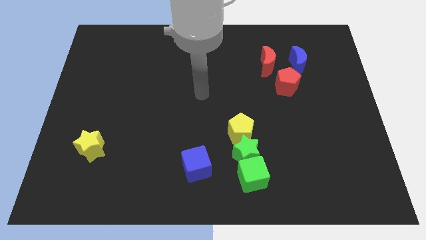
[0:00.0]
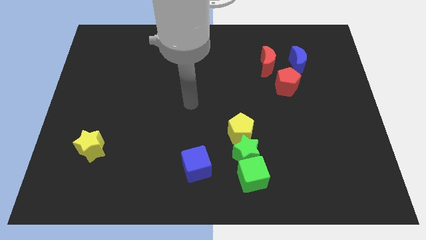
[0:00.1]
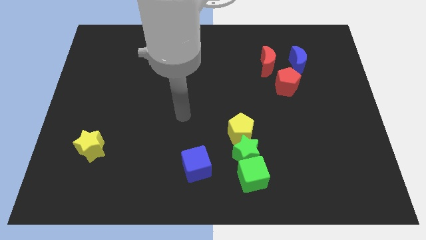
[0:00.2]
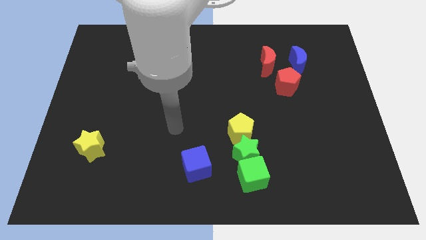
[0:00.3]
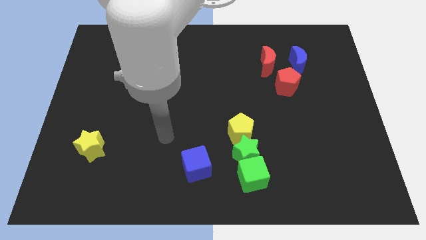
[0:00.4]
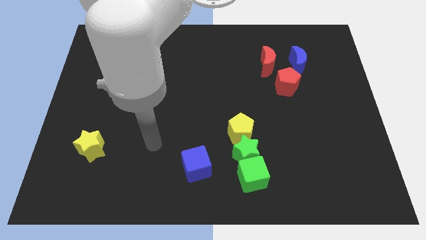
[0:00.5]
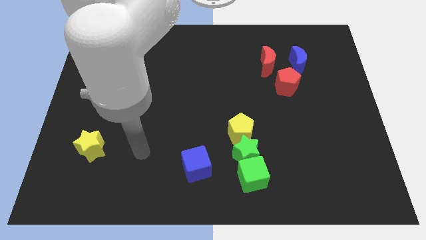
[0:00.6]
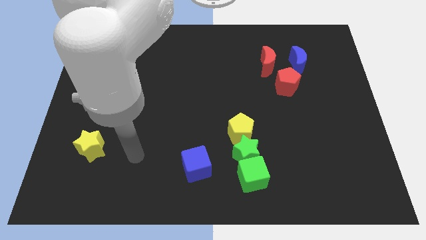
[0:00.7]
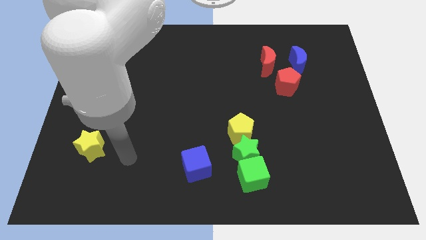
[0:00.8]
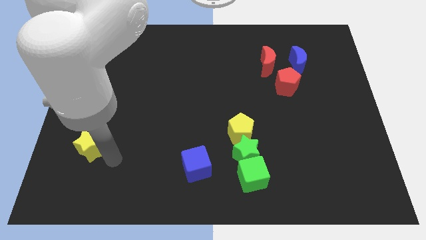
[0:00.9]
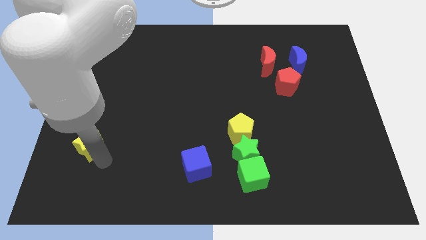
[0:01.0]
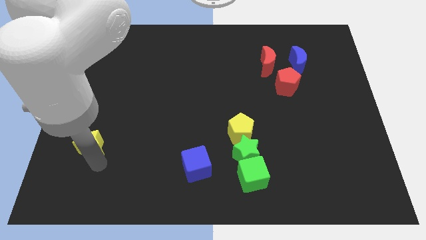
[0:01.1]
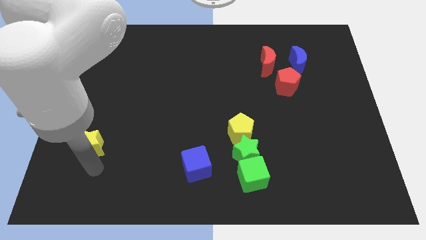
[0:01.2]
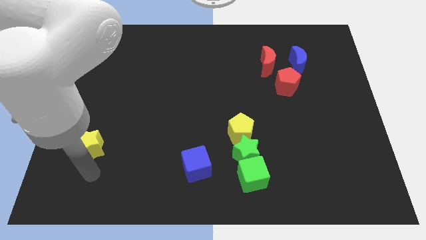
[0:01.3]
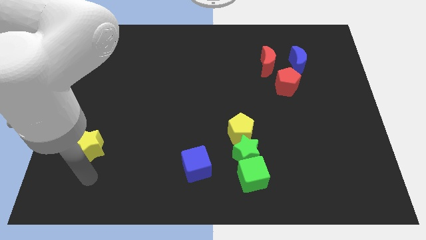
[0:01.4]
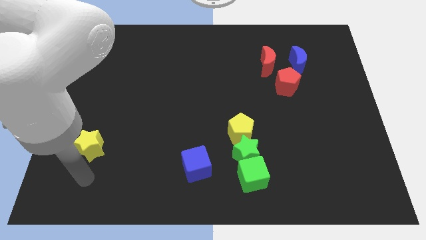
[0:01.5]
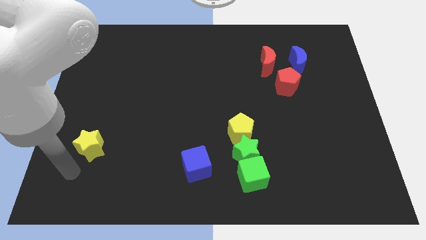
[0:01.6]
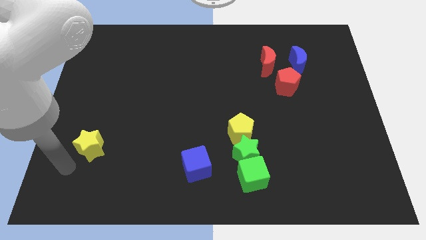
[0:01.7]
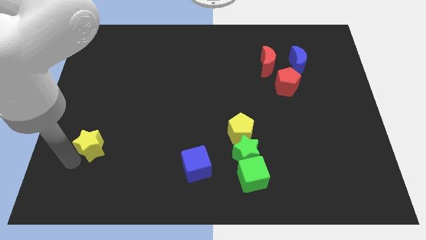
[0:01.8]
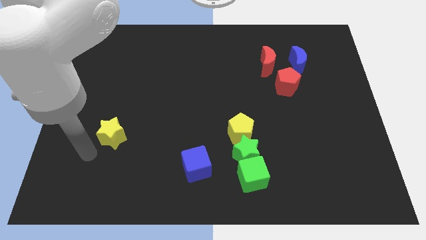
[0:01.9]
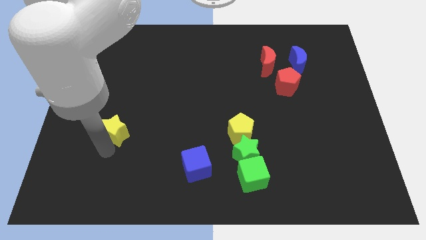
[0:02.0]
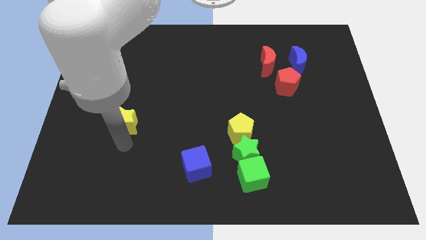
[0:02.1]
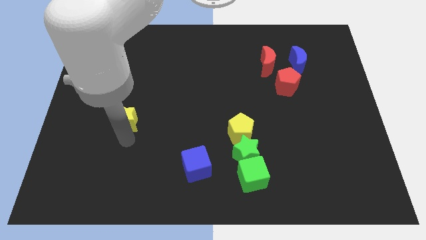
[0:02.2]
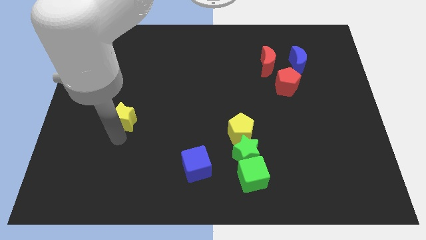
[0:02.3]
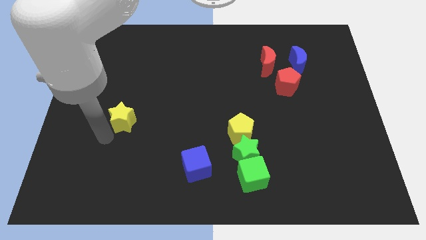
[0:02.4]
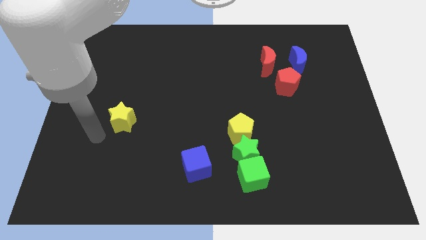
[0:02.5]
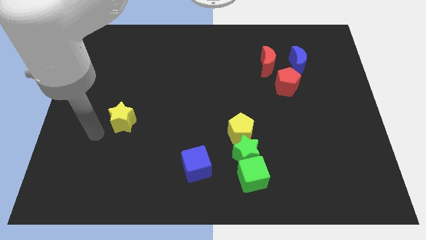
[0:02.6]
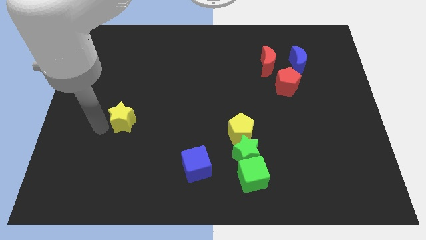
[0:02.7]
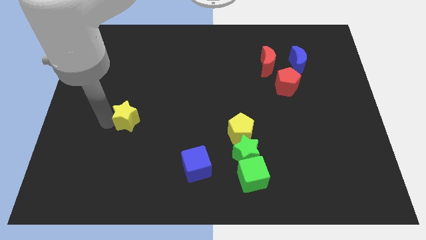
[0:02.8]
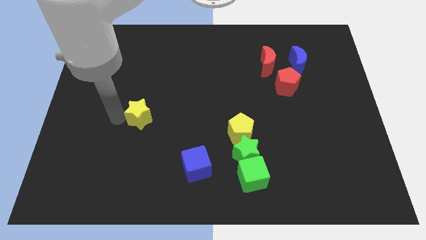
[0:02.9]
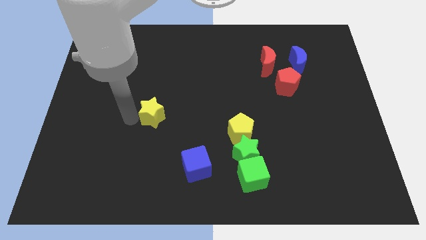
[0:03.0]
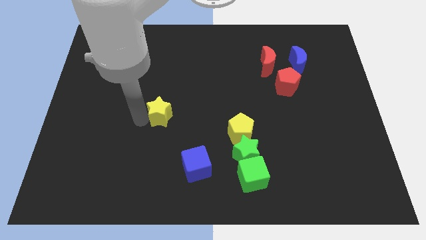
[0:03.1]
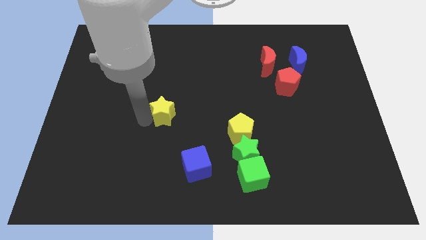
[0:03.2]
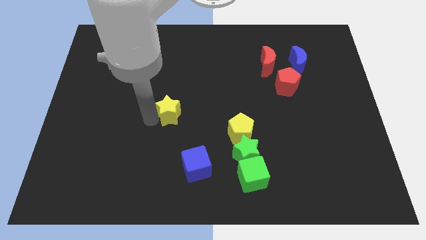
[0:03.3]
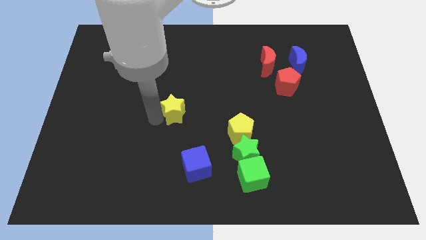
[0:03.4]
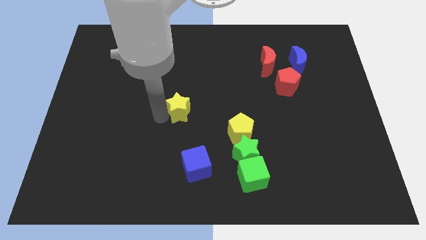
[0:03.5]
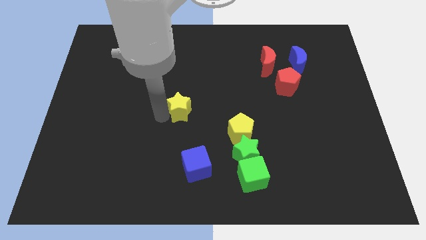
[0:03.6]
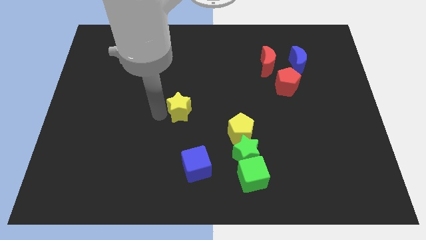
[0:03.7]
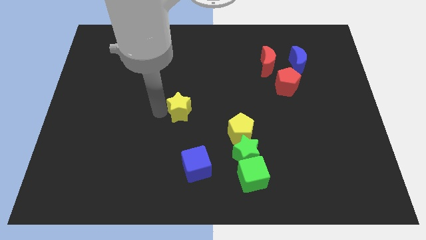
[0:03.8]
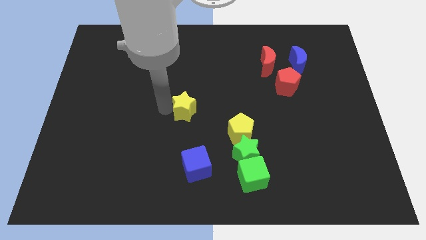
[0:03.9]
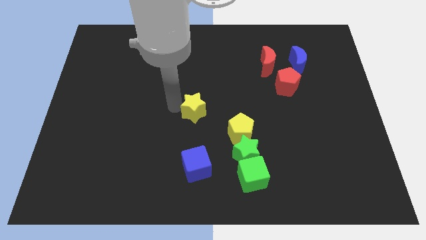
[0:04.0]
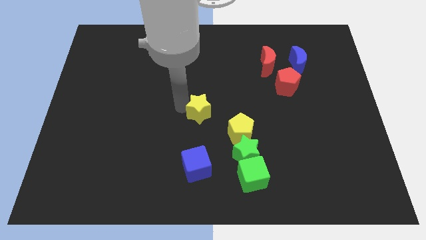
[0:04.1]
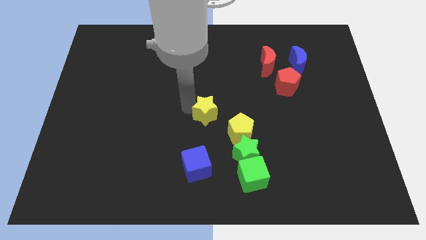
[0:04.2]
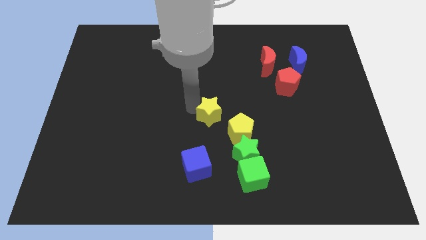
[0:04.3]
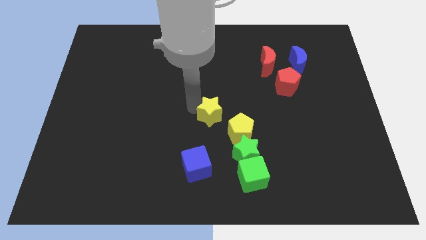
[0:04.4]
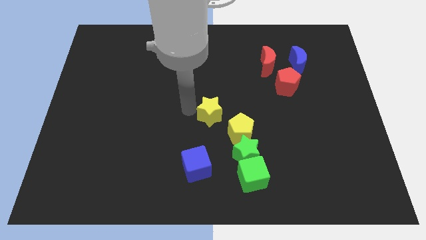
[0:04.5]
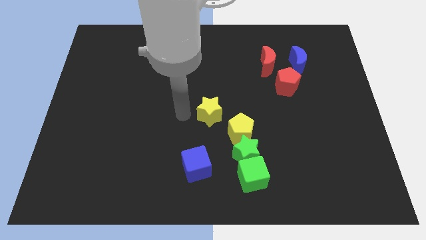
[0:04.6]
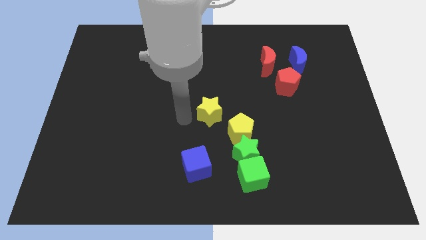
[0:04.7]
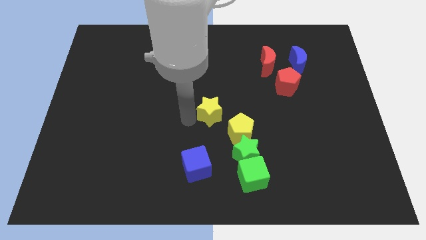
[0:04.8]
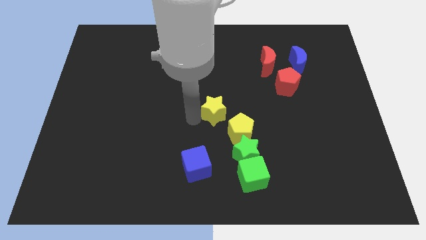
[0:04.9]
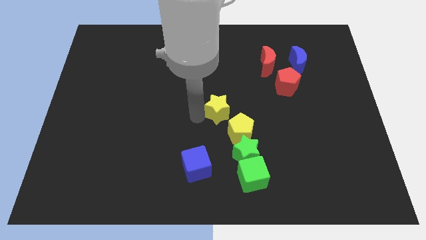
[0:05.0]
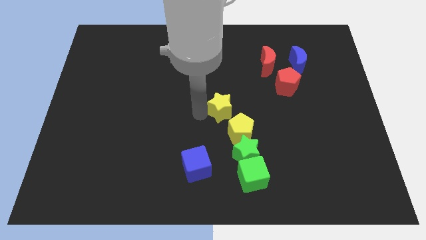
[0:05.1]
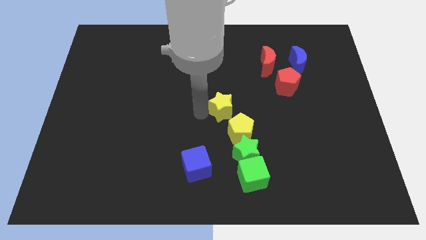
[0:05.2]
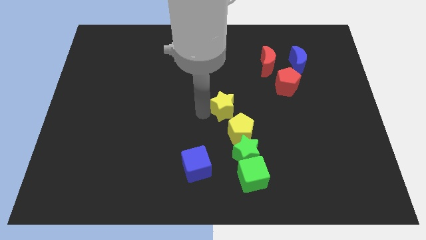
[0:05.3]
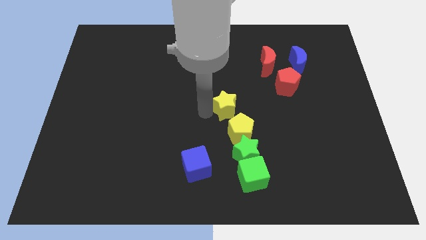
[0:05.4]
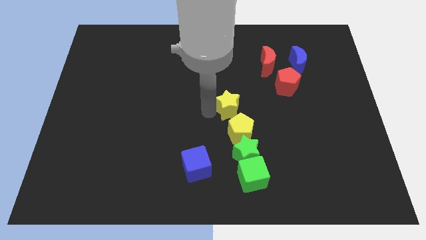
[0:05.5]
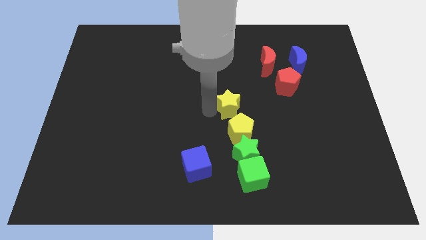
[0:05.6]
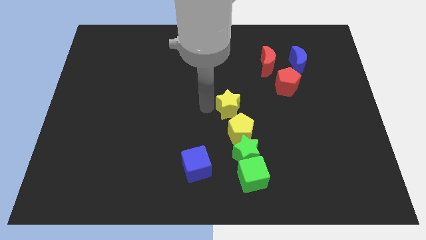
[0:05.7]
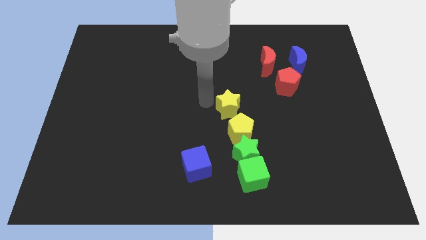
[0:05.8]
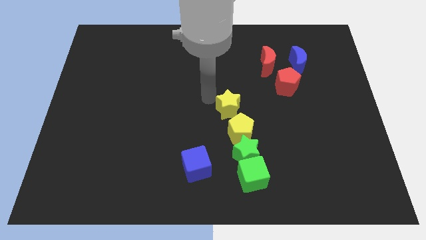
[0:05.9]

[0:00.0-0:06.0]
move the yellow star above the yellow pentagon

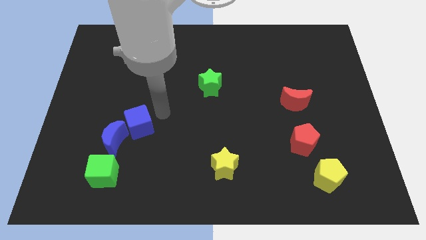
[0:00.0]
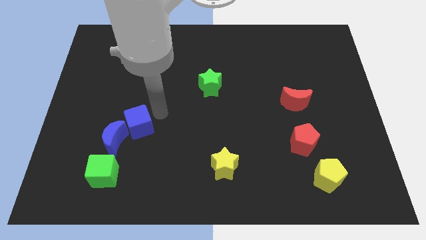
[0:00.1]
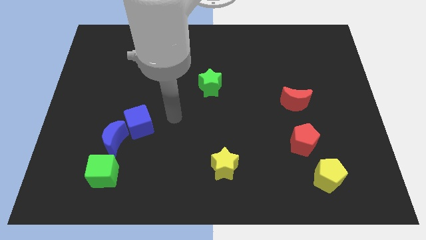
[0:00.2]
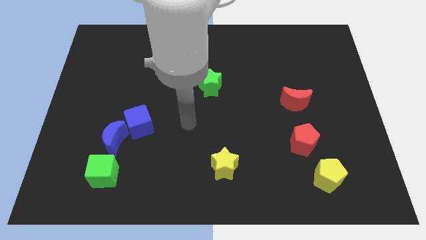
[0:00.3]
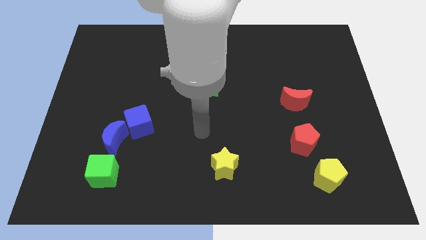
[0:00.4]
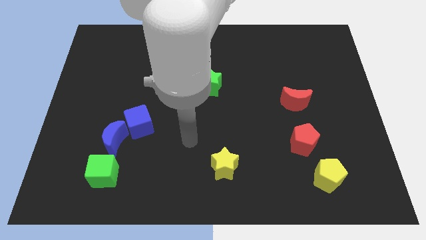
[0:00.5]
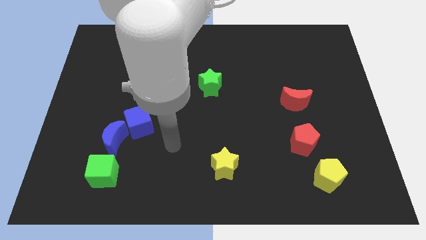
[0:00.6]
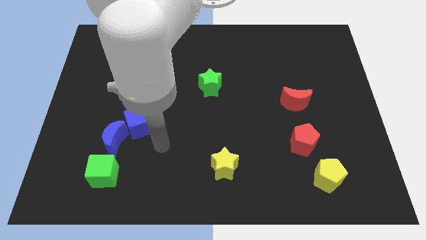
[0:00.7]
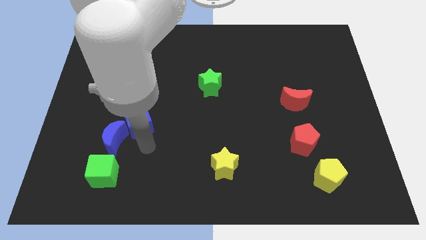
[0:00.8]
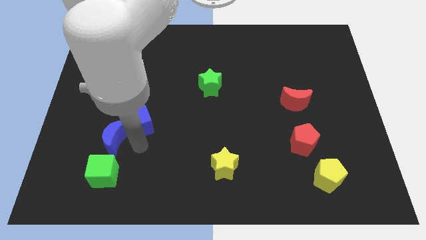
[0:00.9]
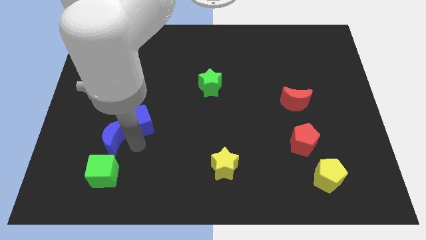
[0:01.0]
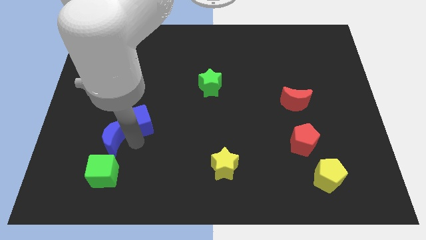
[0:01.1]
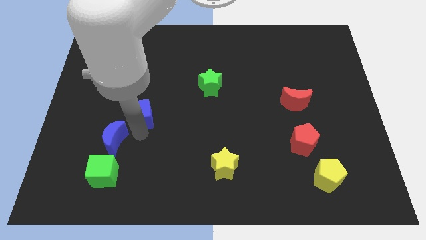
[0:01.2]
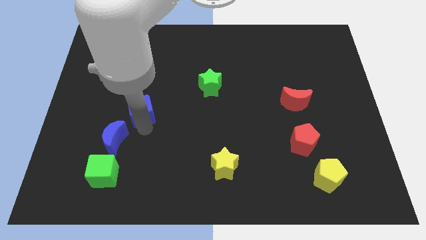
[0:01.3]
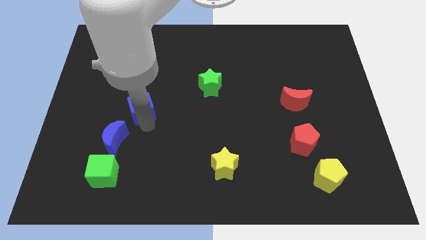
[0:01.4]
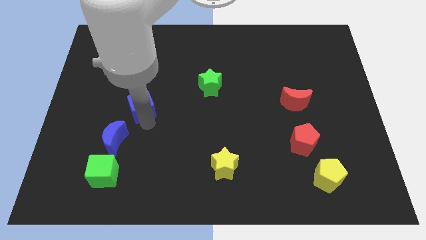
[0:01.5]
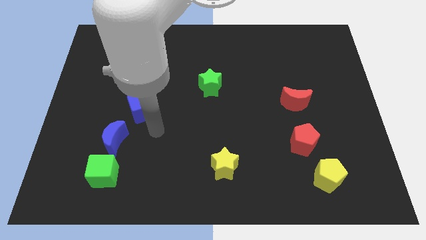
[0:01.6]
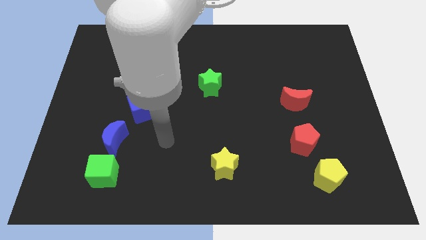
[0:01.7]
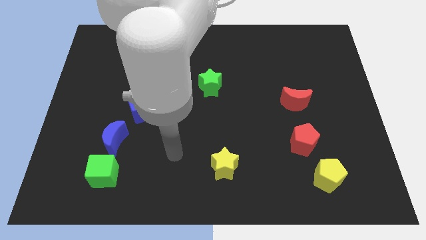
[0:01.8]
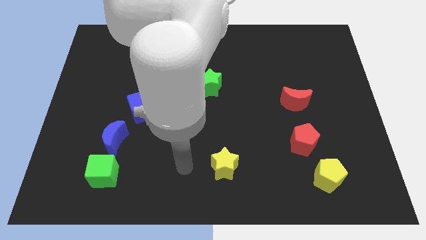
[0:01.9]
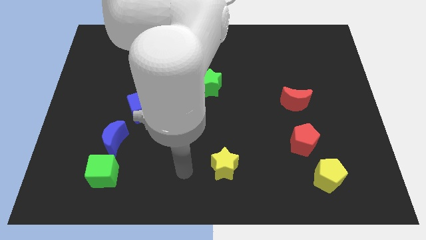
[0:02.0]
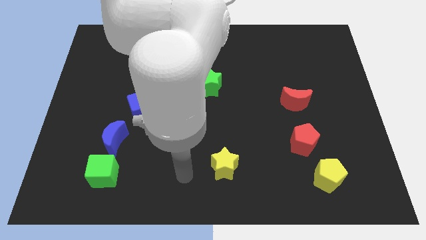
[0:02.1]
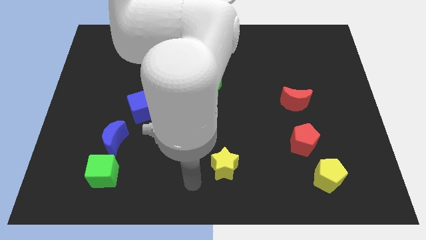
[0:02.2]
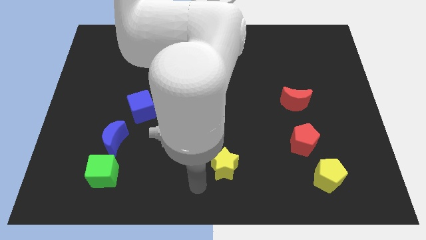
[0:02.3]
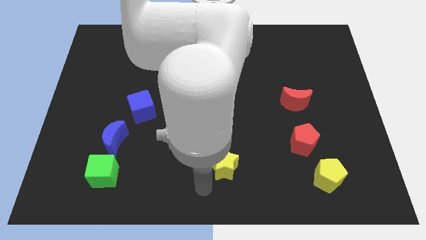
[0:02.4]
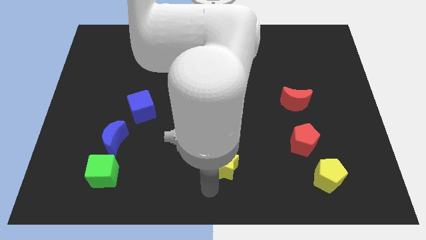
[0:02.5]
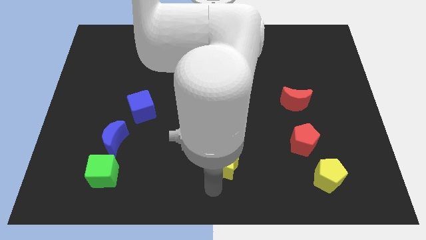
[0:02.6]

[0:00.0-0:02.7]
separate blue cube from blue moon

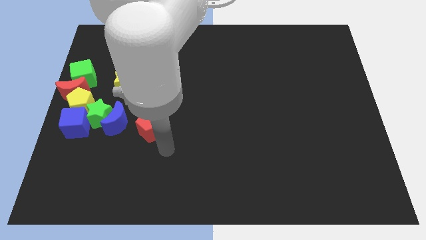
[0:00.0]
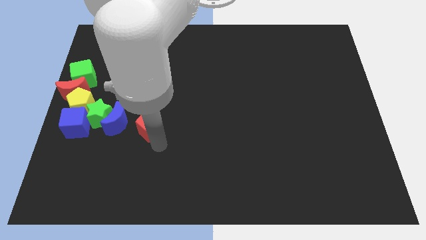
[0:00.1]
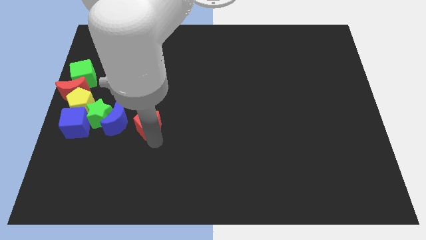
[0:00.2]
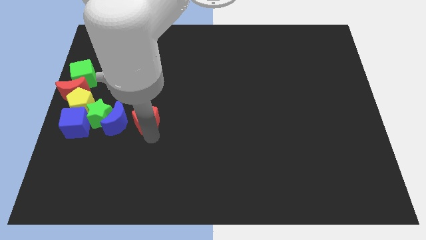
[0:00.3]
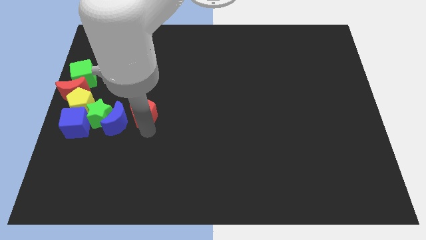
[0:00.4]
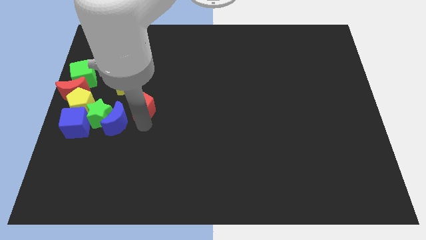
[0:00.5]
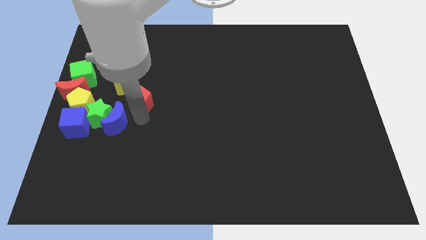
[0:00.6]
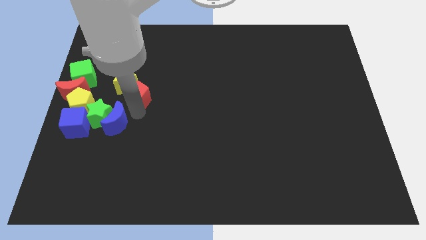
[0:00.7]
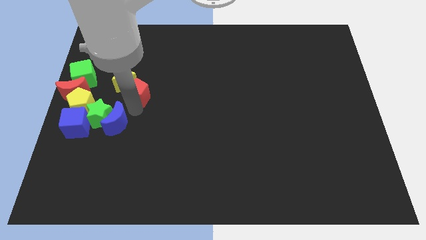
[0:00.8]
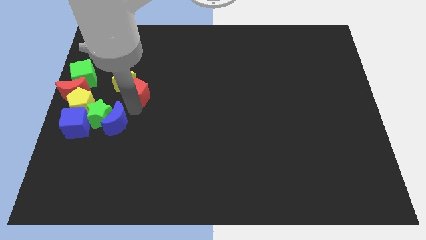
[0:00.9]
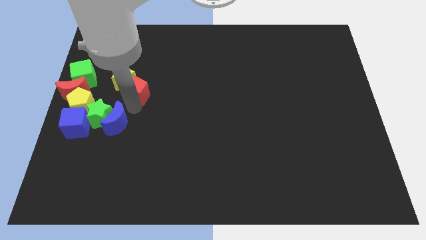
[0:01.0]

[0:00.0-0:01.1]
push red pentagon into yellow star
